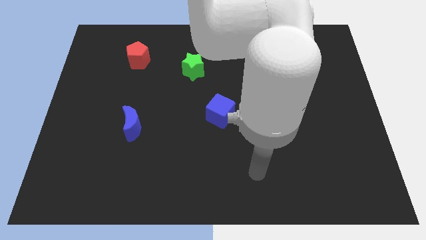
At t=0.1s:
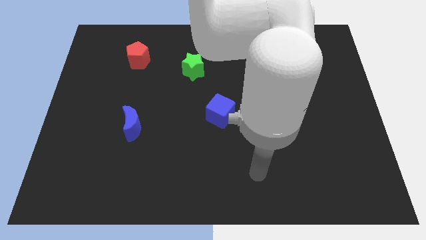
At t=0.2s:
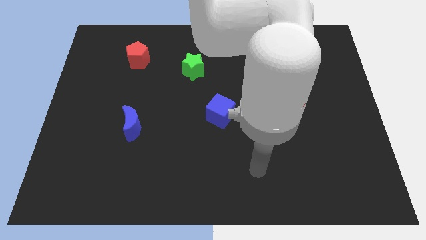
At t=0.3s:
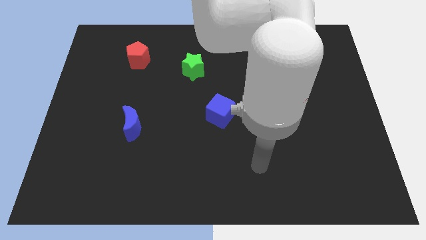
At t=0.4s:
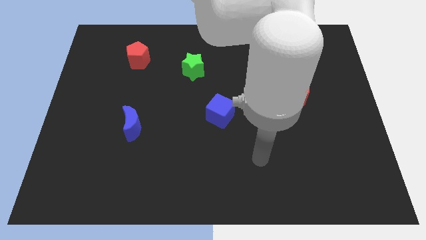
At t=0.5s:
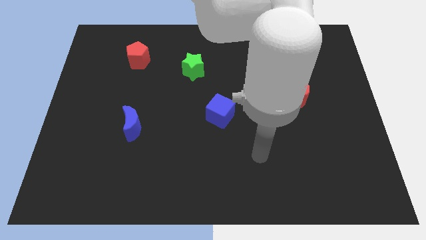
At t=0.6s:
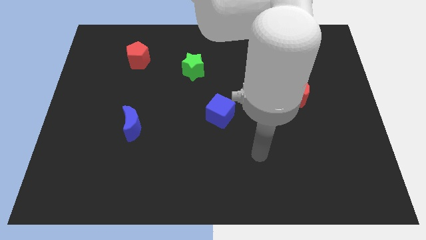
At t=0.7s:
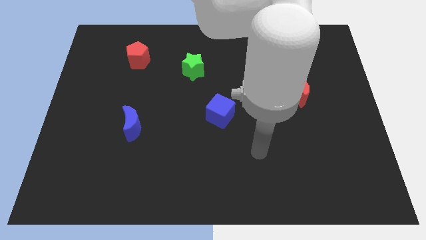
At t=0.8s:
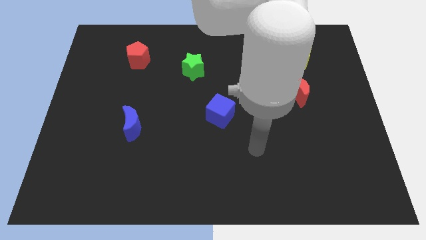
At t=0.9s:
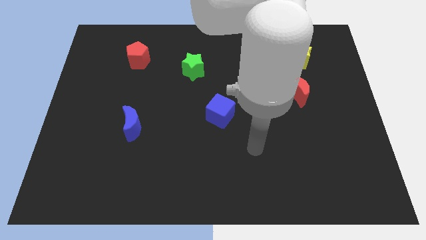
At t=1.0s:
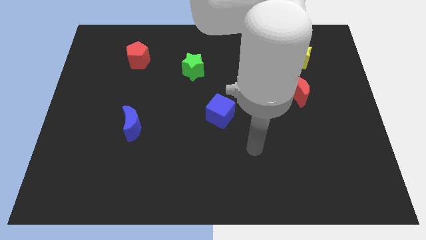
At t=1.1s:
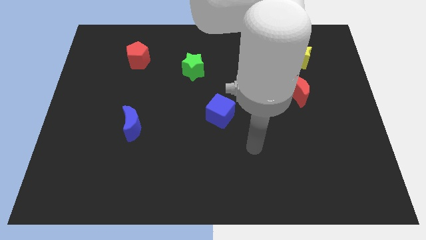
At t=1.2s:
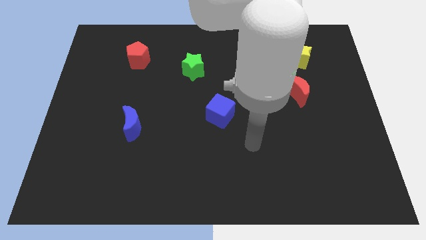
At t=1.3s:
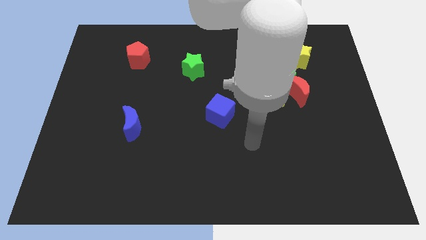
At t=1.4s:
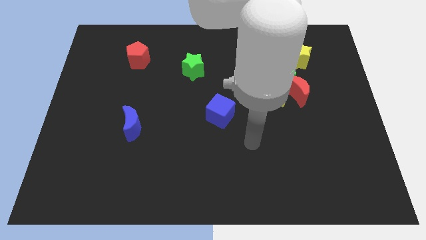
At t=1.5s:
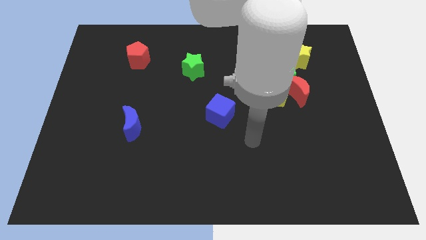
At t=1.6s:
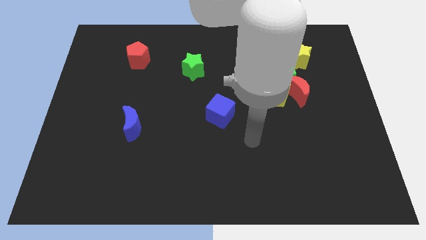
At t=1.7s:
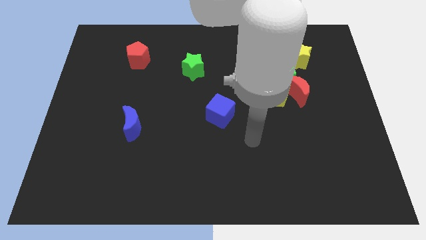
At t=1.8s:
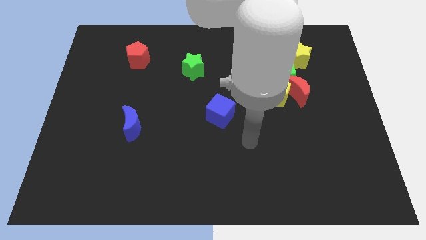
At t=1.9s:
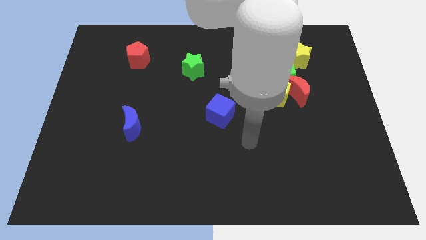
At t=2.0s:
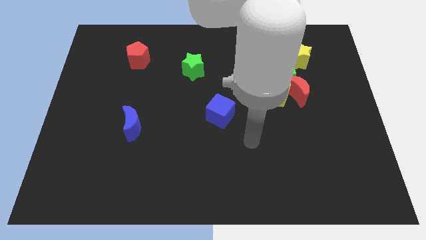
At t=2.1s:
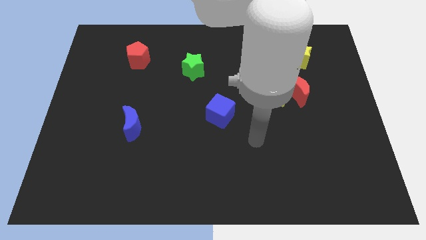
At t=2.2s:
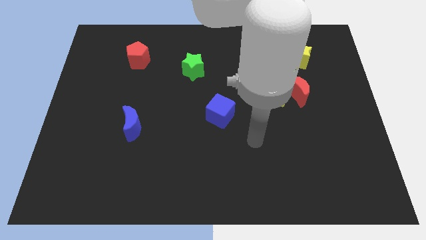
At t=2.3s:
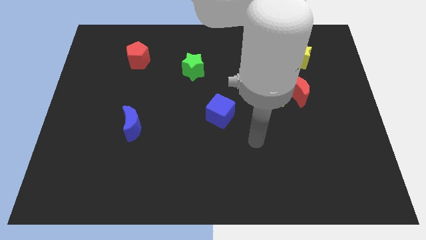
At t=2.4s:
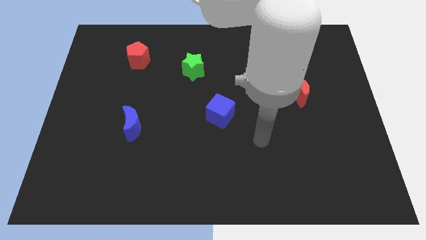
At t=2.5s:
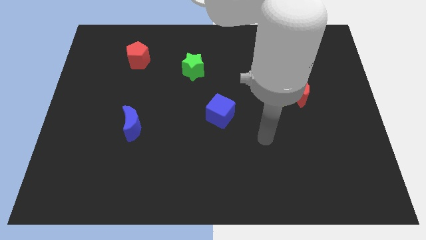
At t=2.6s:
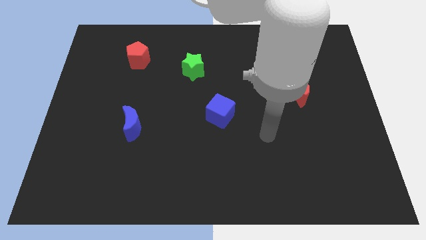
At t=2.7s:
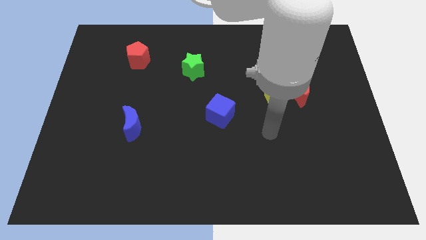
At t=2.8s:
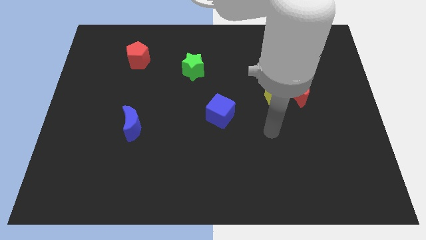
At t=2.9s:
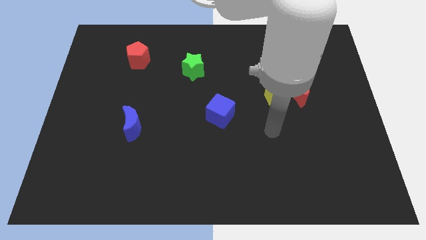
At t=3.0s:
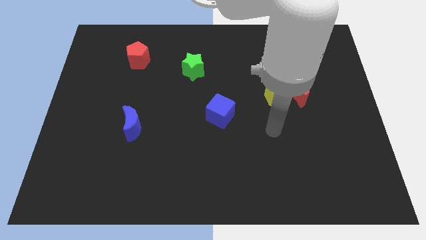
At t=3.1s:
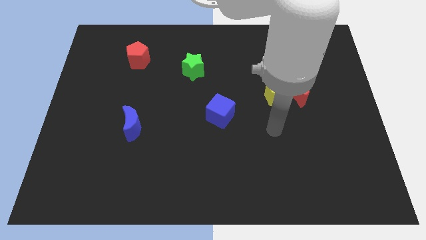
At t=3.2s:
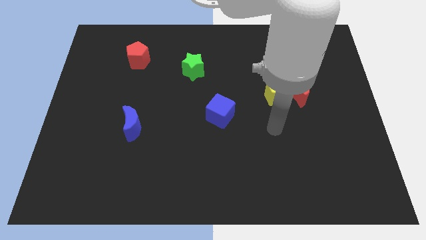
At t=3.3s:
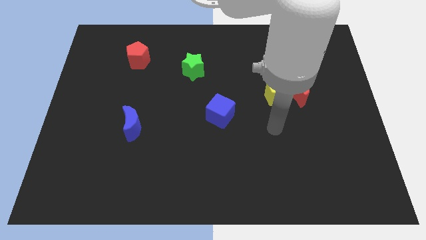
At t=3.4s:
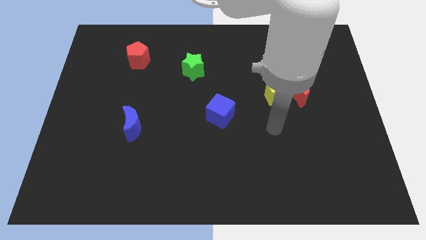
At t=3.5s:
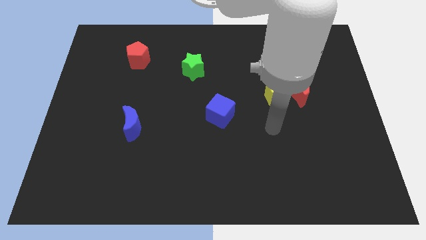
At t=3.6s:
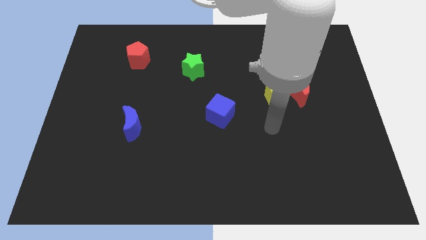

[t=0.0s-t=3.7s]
move your arm towards the yellow pentagon

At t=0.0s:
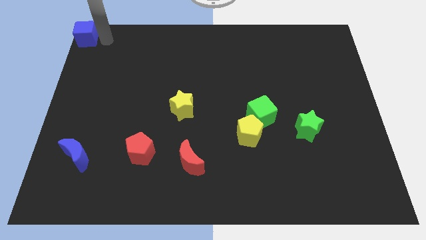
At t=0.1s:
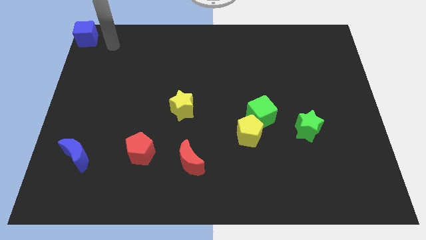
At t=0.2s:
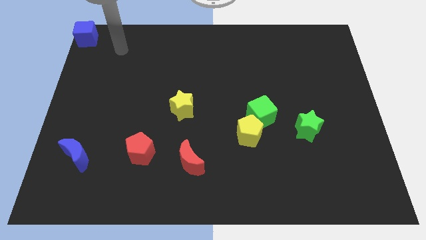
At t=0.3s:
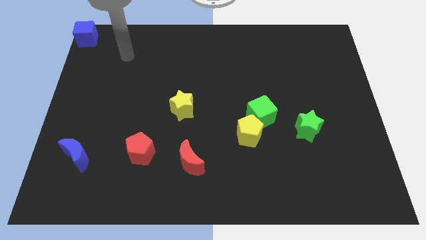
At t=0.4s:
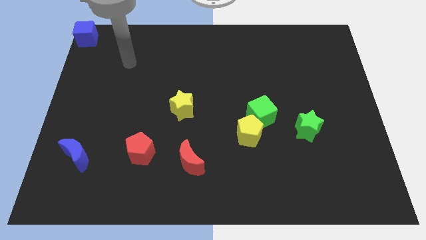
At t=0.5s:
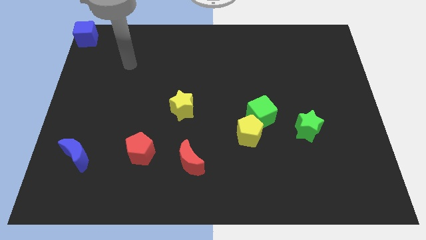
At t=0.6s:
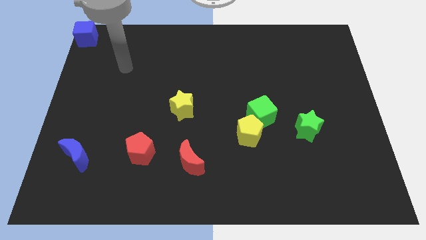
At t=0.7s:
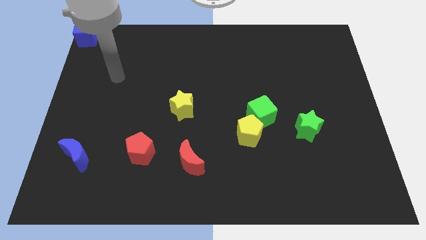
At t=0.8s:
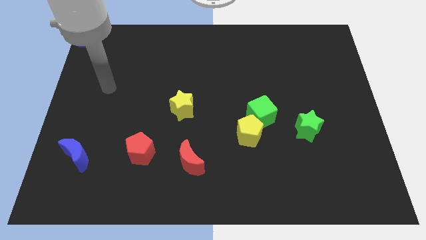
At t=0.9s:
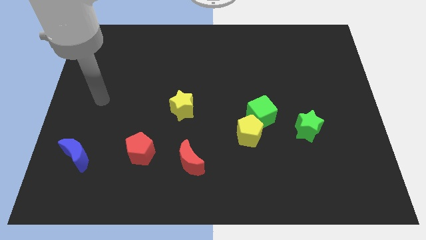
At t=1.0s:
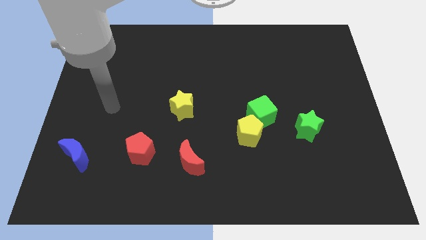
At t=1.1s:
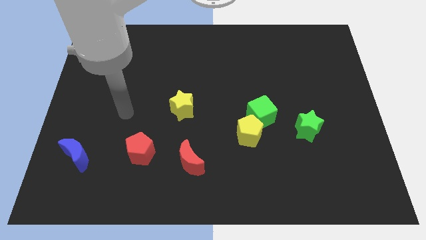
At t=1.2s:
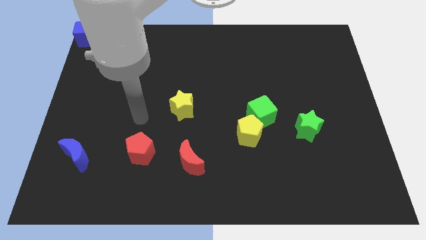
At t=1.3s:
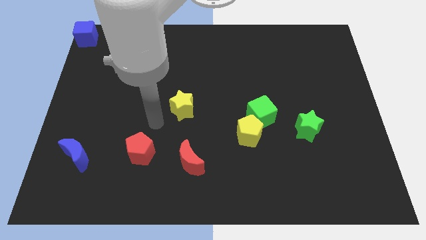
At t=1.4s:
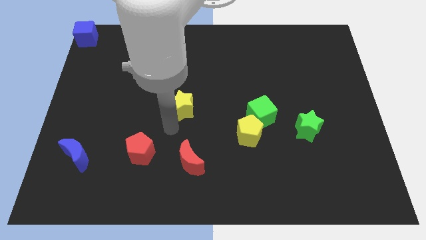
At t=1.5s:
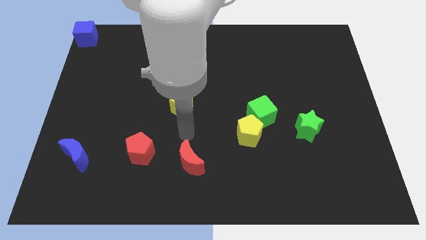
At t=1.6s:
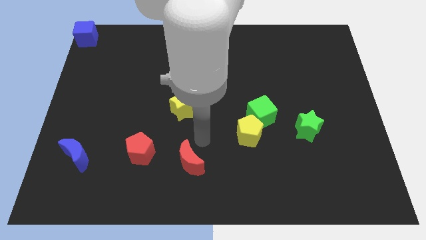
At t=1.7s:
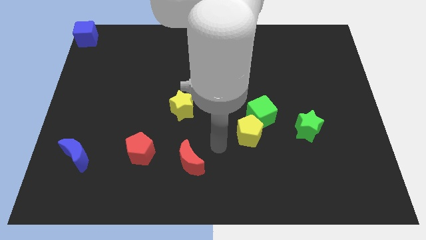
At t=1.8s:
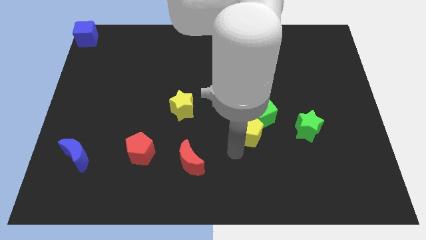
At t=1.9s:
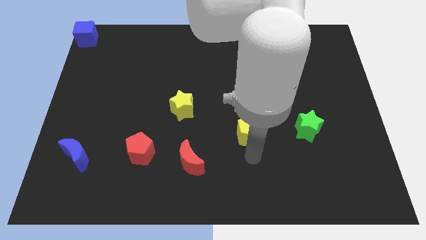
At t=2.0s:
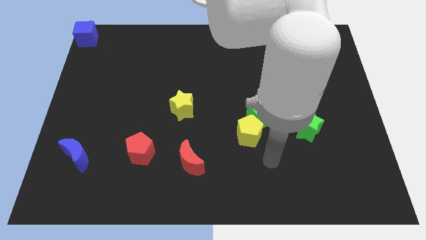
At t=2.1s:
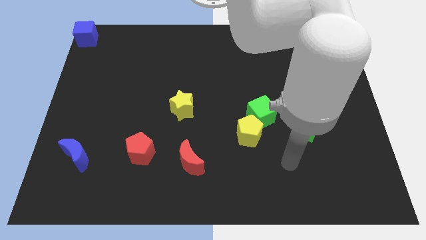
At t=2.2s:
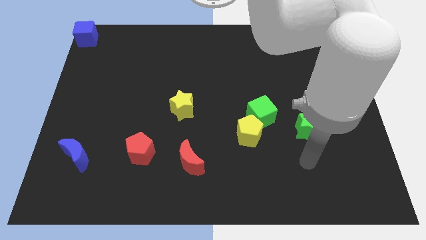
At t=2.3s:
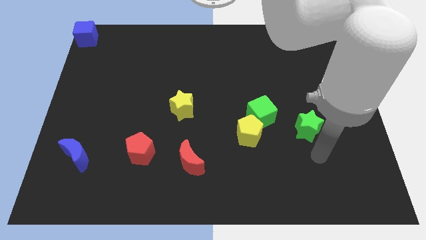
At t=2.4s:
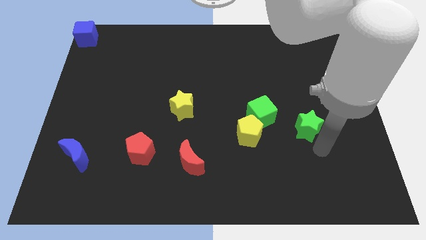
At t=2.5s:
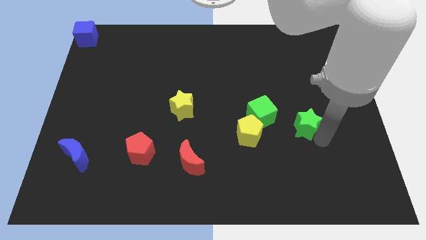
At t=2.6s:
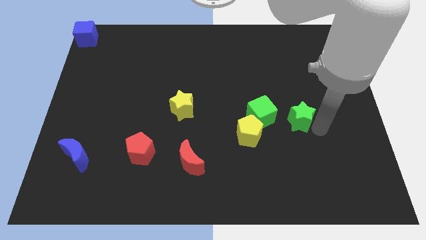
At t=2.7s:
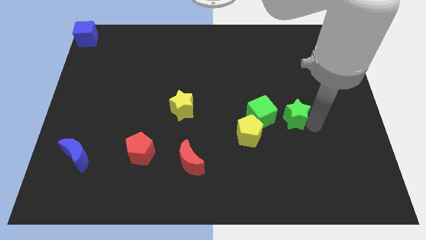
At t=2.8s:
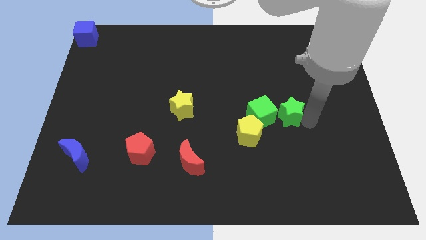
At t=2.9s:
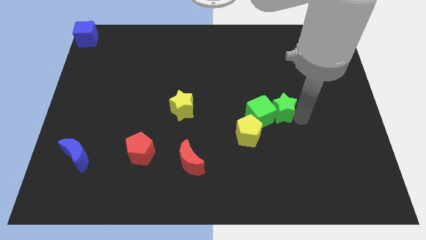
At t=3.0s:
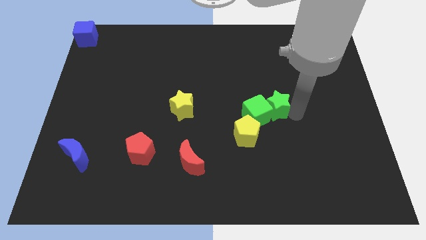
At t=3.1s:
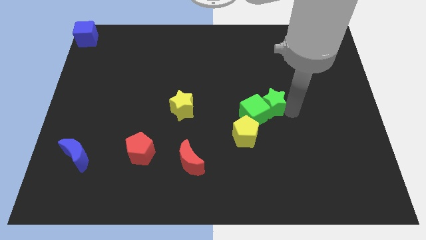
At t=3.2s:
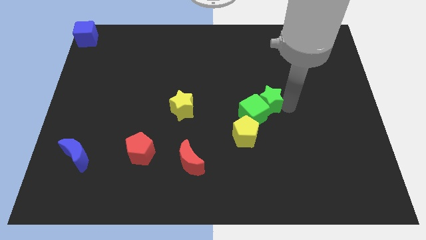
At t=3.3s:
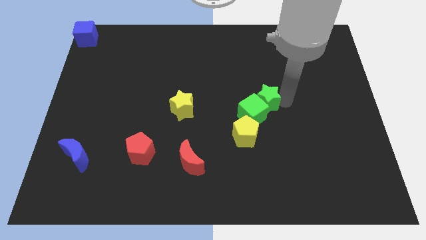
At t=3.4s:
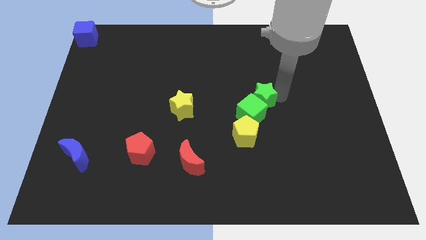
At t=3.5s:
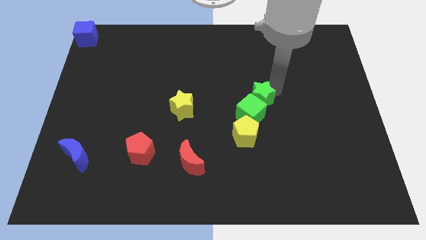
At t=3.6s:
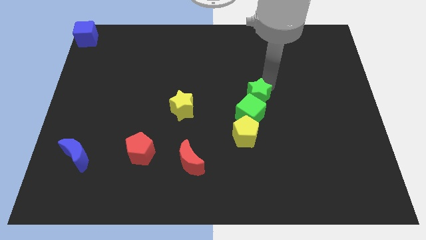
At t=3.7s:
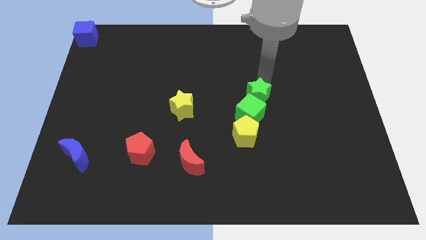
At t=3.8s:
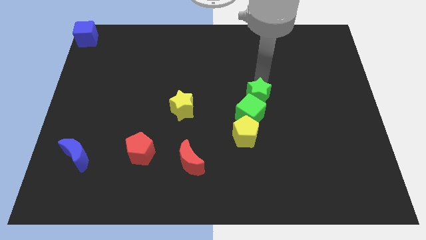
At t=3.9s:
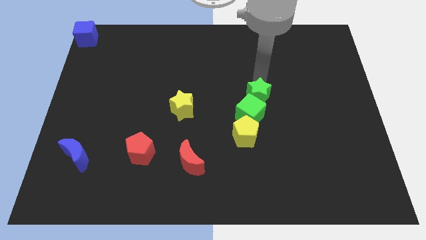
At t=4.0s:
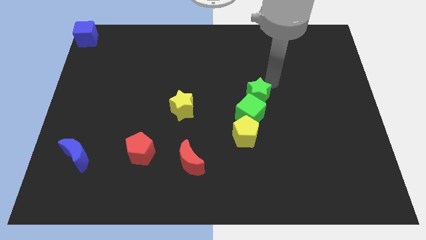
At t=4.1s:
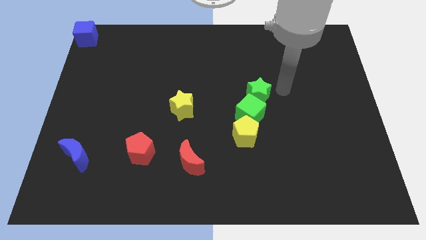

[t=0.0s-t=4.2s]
move green star above the green cube

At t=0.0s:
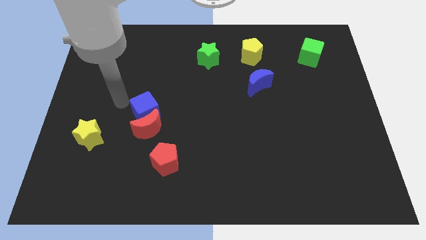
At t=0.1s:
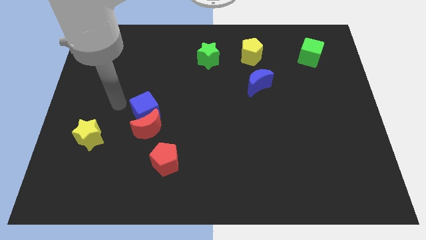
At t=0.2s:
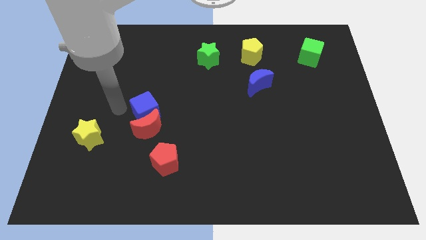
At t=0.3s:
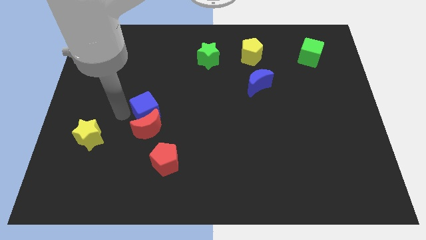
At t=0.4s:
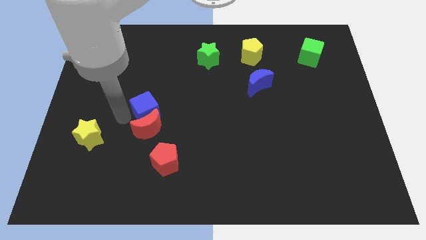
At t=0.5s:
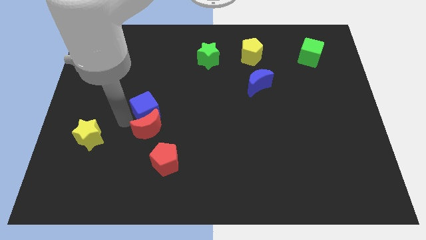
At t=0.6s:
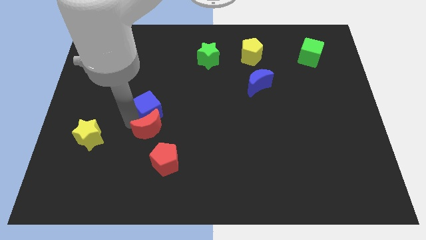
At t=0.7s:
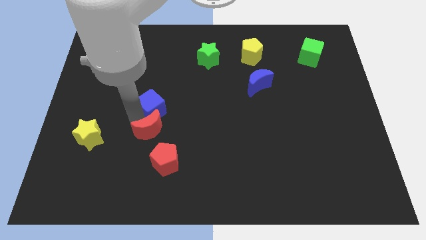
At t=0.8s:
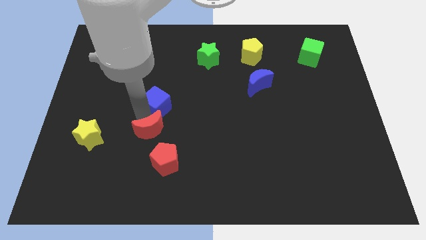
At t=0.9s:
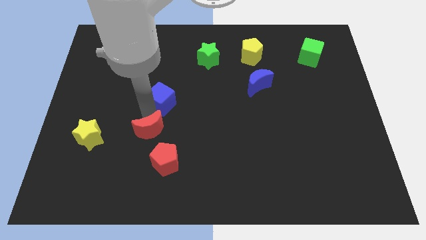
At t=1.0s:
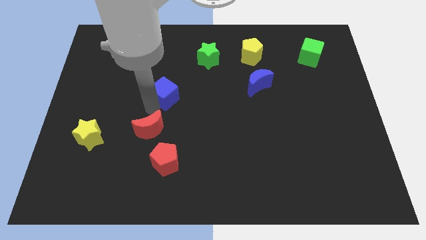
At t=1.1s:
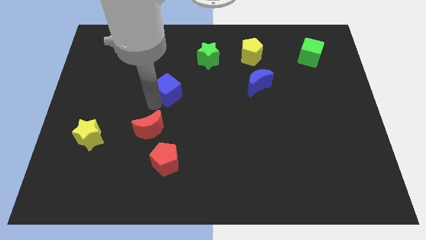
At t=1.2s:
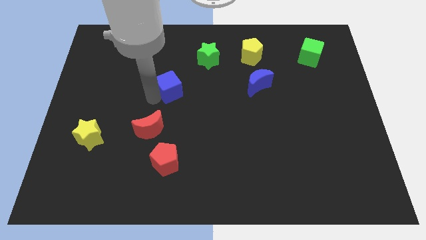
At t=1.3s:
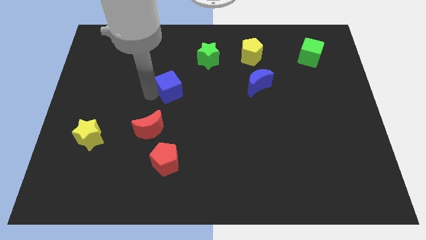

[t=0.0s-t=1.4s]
separate the blue cube from the red moon
